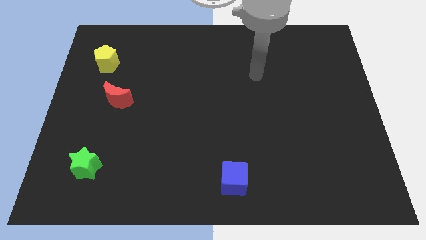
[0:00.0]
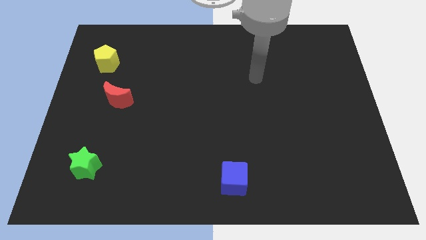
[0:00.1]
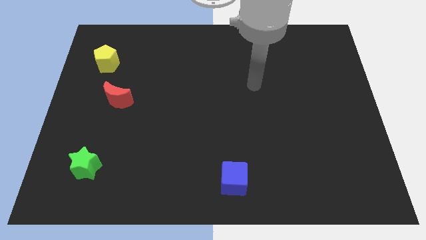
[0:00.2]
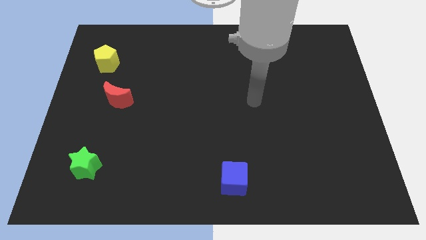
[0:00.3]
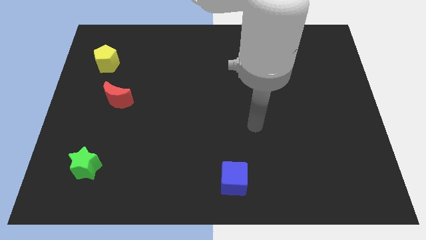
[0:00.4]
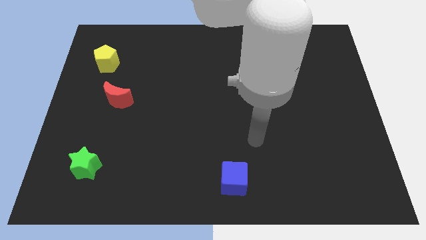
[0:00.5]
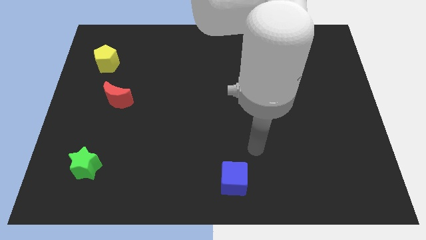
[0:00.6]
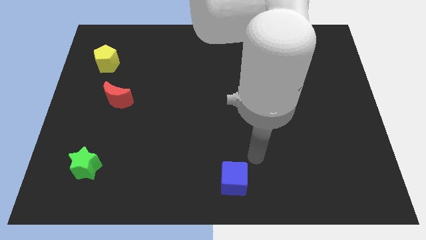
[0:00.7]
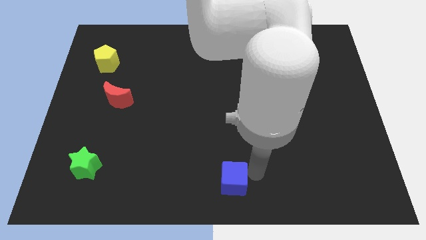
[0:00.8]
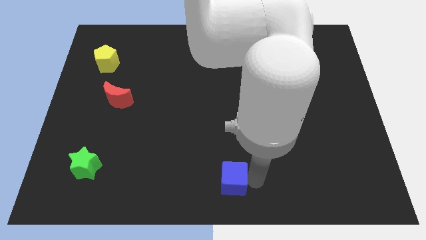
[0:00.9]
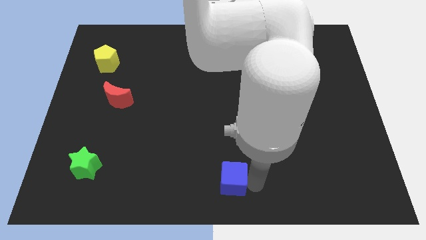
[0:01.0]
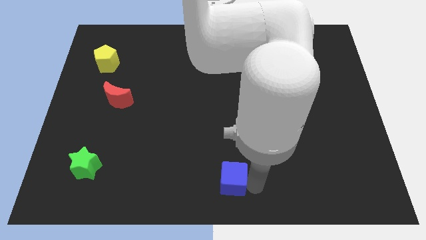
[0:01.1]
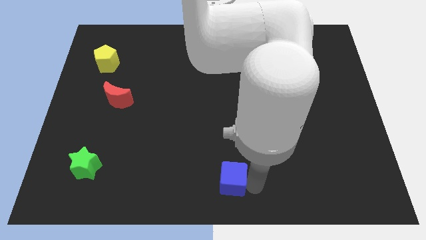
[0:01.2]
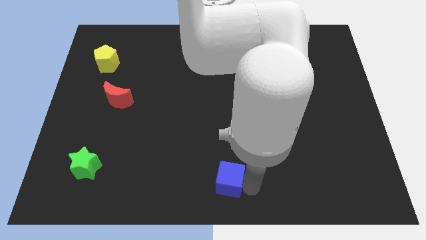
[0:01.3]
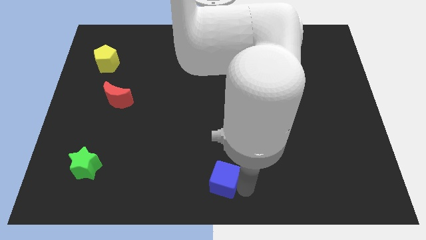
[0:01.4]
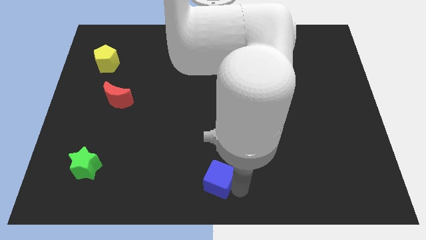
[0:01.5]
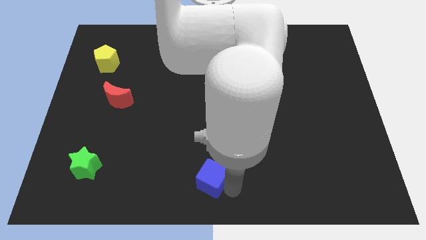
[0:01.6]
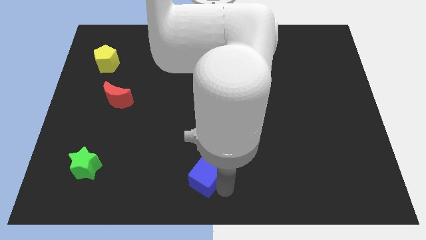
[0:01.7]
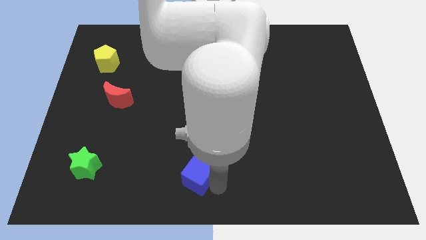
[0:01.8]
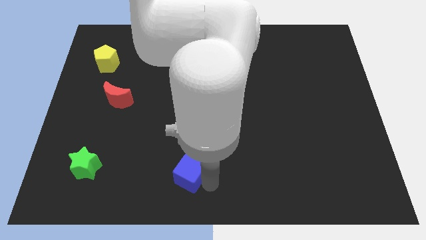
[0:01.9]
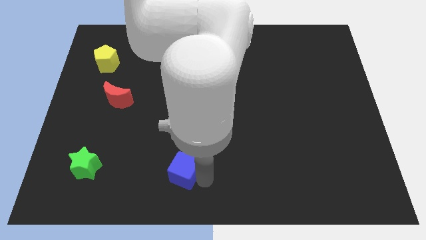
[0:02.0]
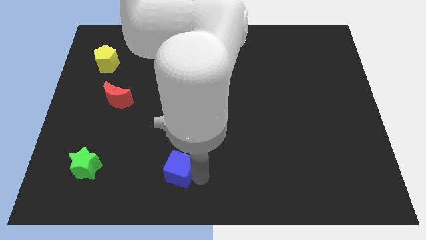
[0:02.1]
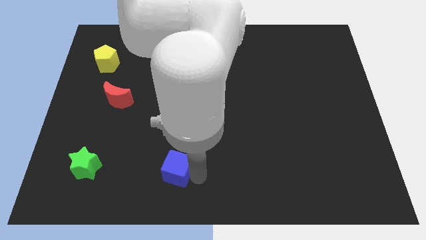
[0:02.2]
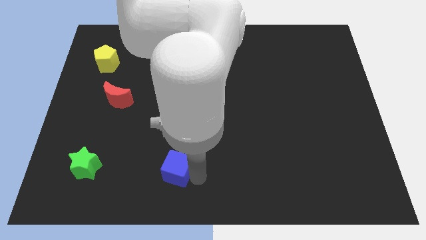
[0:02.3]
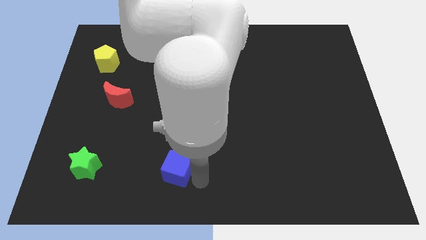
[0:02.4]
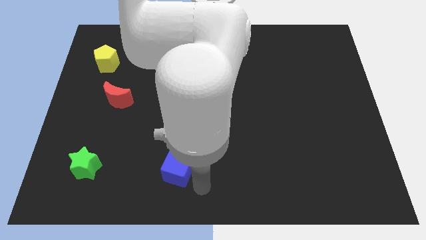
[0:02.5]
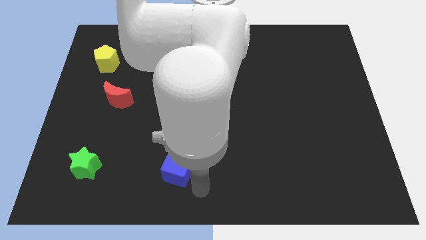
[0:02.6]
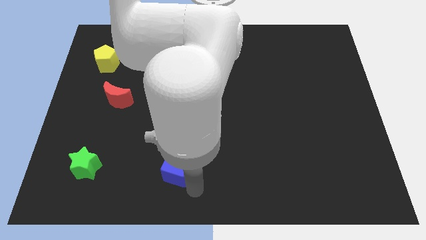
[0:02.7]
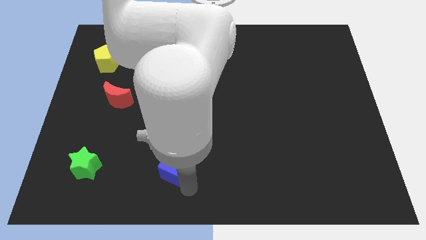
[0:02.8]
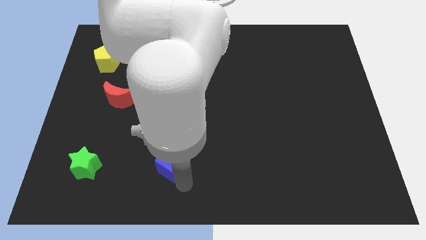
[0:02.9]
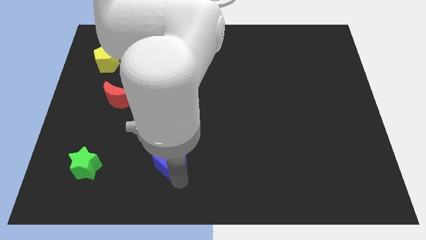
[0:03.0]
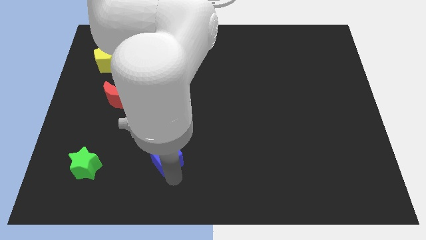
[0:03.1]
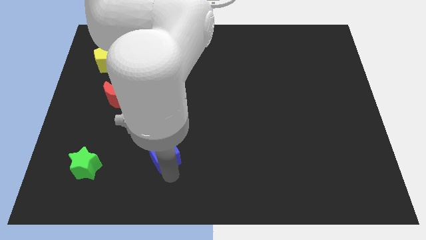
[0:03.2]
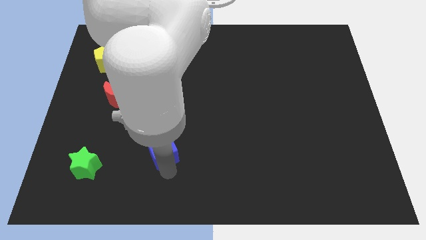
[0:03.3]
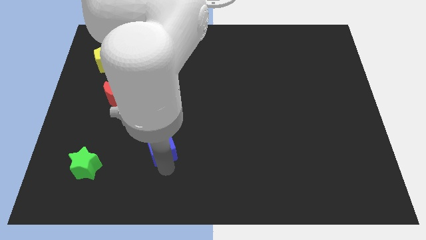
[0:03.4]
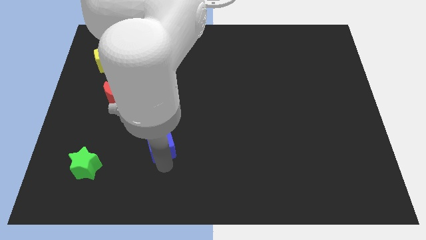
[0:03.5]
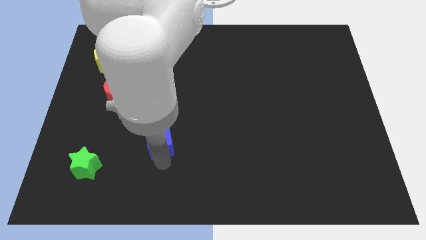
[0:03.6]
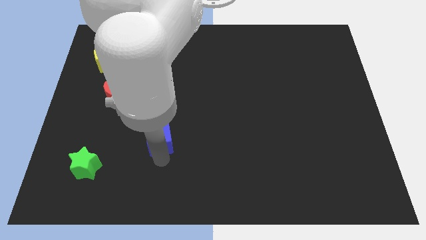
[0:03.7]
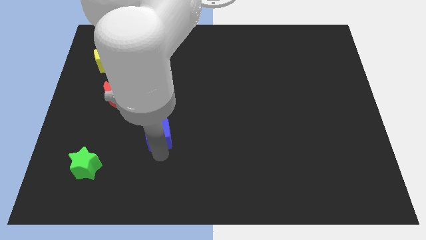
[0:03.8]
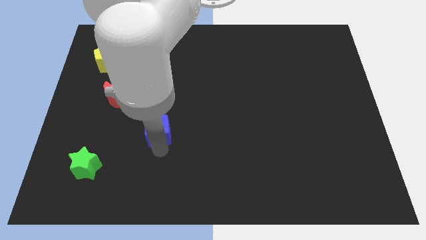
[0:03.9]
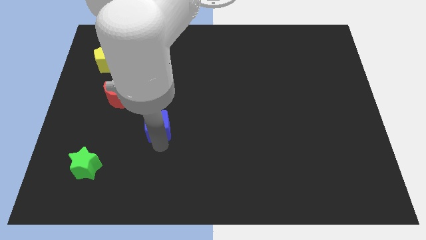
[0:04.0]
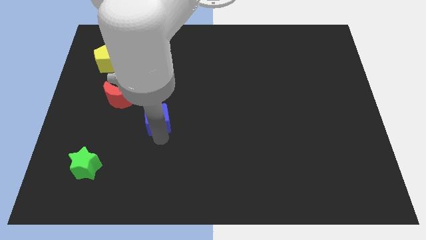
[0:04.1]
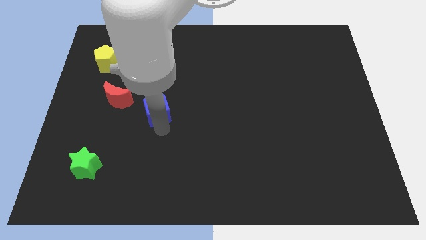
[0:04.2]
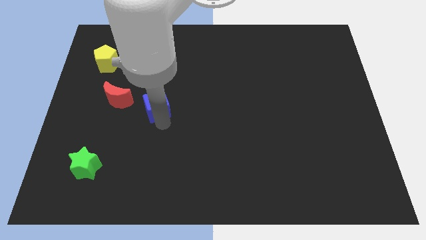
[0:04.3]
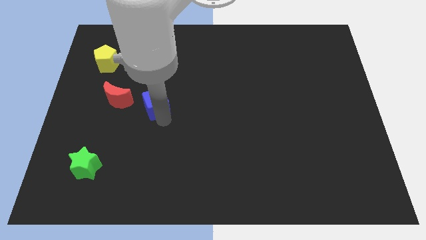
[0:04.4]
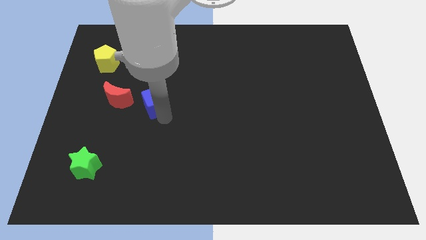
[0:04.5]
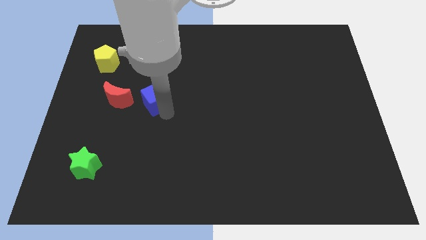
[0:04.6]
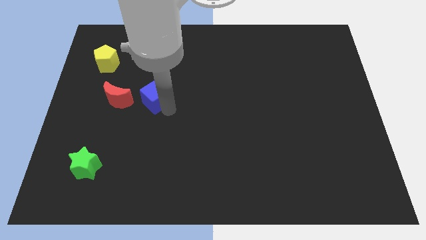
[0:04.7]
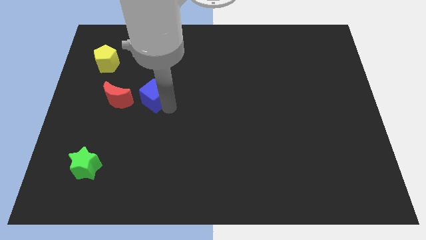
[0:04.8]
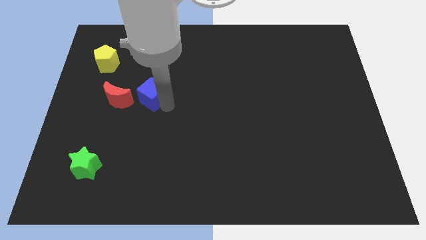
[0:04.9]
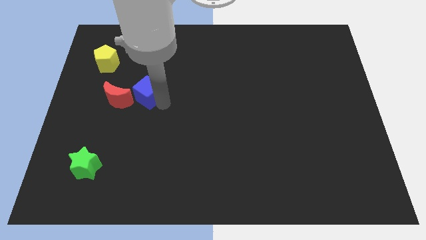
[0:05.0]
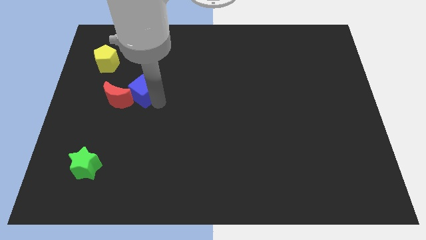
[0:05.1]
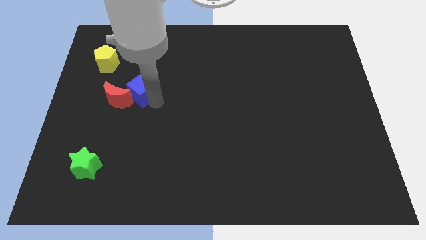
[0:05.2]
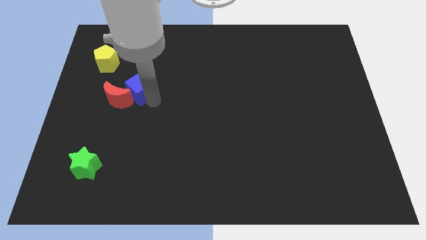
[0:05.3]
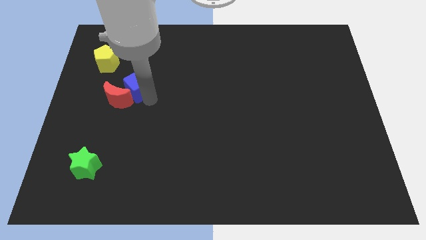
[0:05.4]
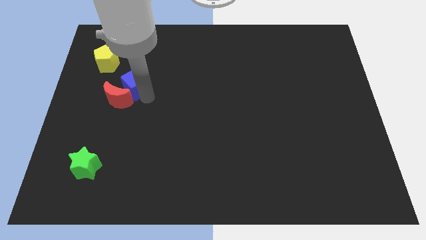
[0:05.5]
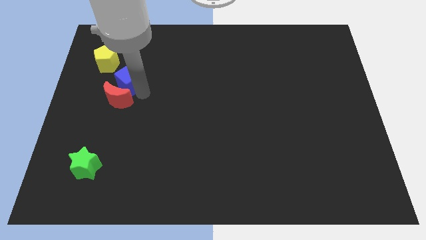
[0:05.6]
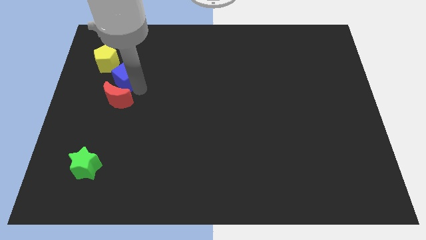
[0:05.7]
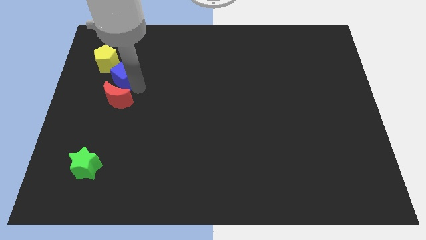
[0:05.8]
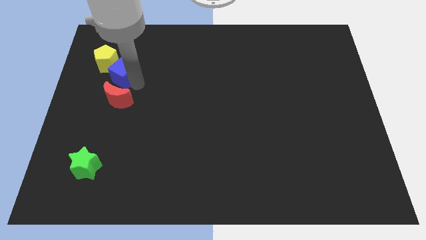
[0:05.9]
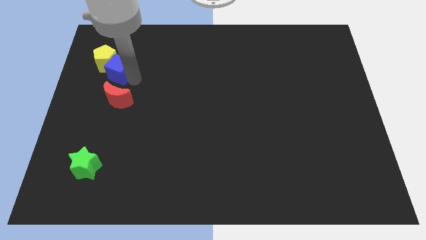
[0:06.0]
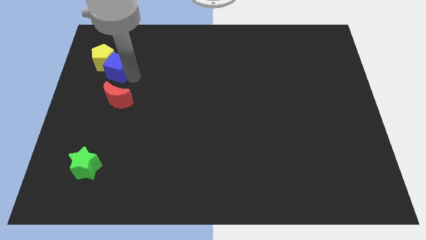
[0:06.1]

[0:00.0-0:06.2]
put the blue cube next to the yellow pentagon

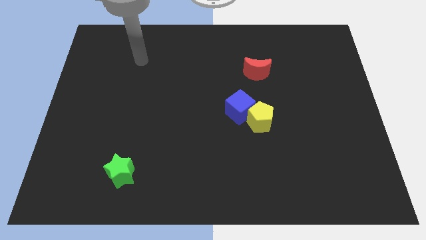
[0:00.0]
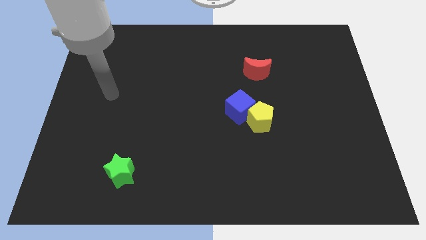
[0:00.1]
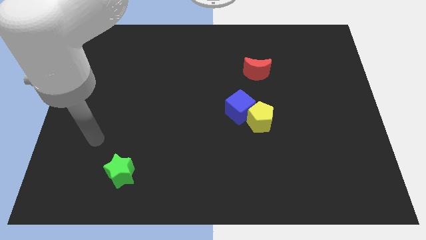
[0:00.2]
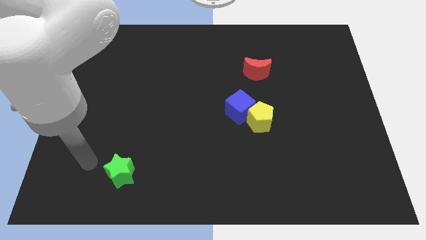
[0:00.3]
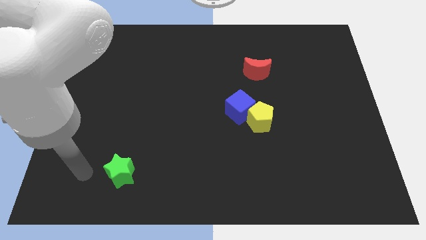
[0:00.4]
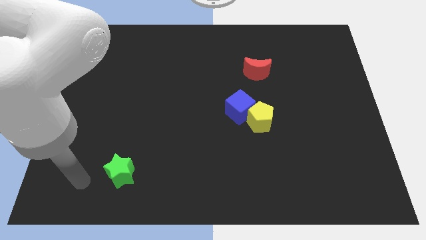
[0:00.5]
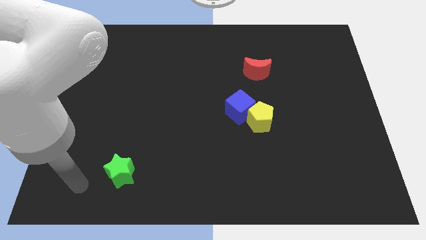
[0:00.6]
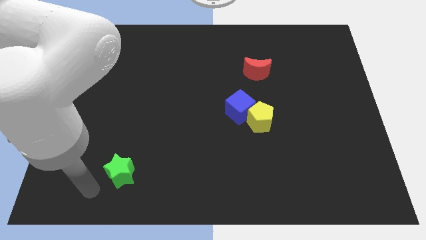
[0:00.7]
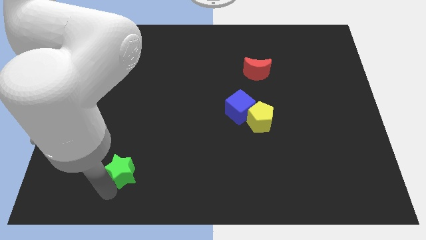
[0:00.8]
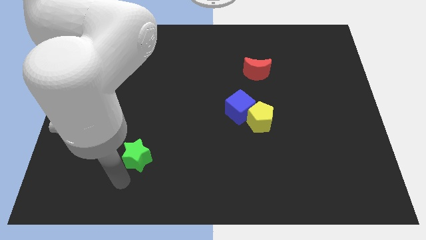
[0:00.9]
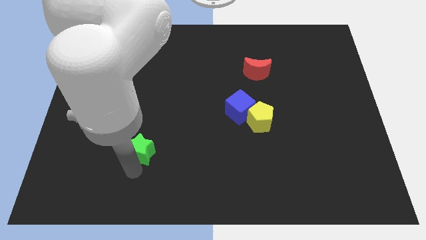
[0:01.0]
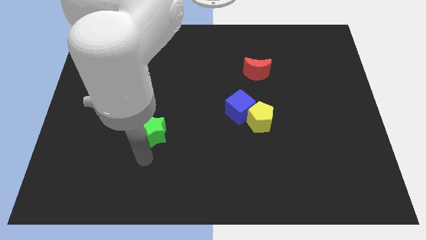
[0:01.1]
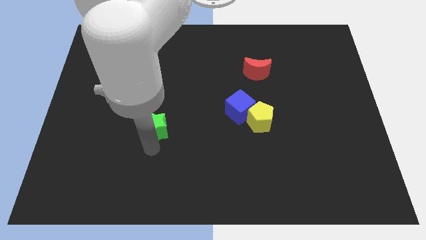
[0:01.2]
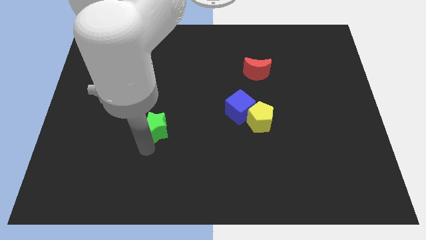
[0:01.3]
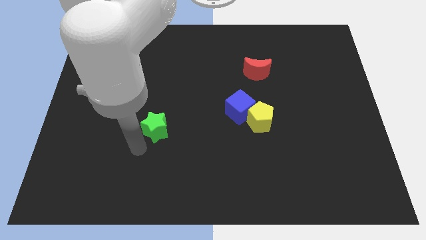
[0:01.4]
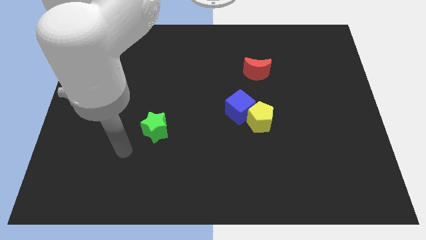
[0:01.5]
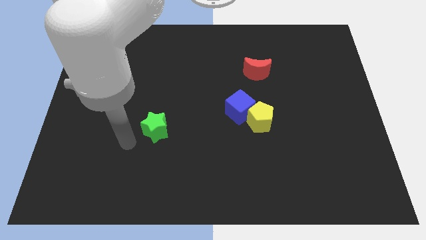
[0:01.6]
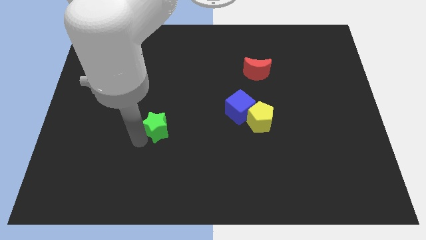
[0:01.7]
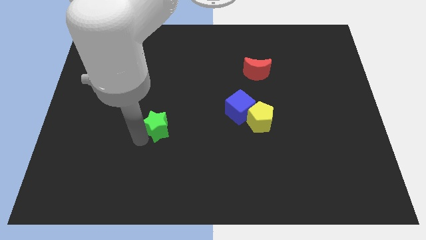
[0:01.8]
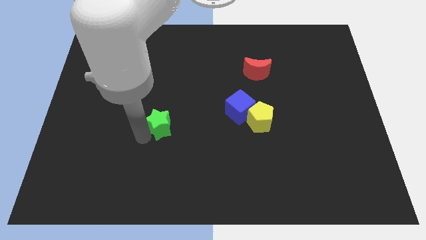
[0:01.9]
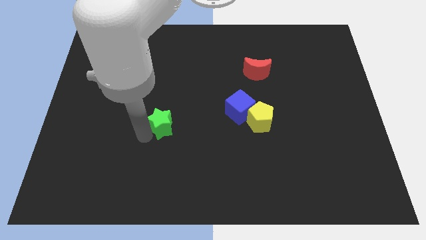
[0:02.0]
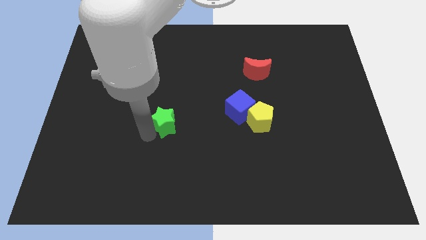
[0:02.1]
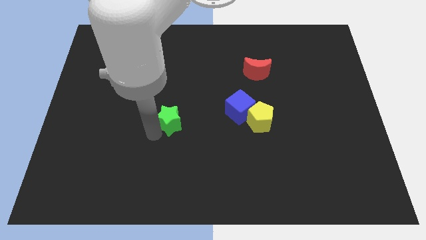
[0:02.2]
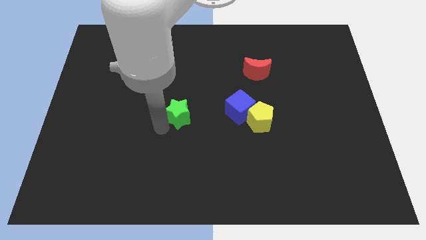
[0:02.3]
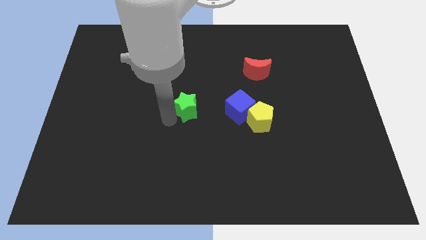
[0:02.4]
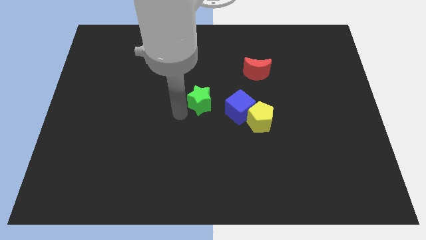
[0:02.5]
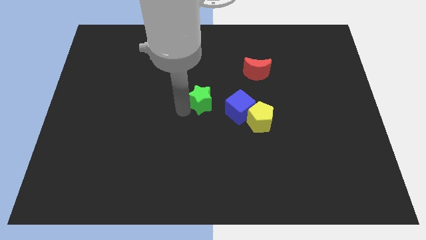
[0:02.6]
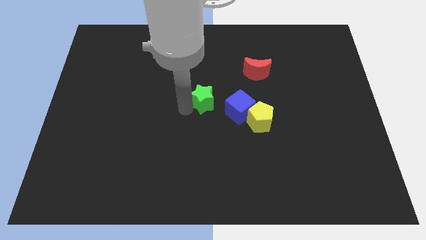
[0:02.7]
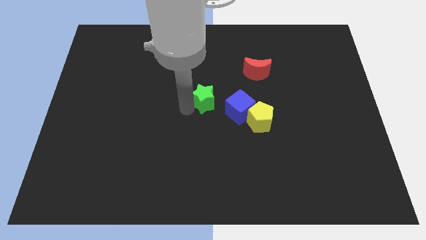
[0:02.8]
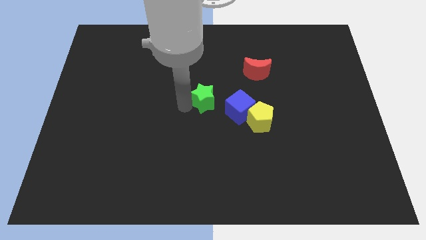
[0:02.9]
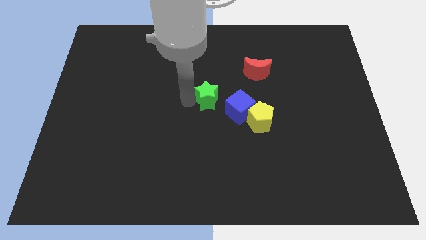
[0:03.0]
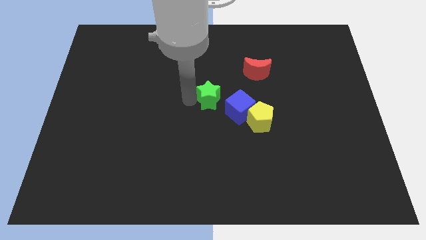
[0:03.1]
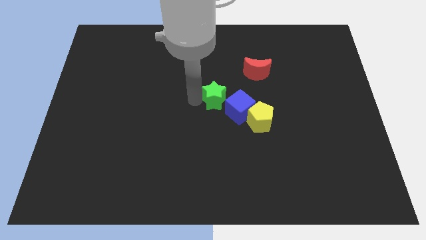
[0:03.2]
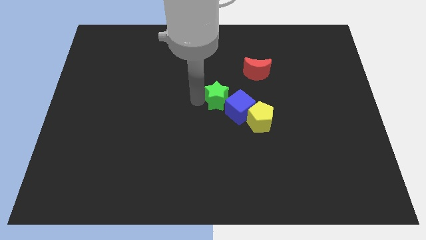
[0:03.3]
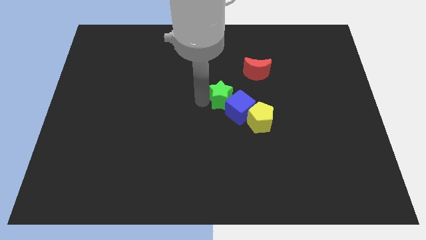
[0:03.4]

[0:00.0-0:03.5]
push the star close to the blue cube
